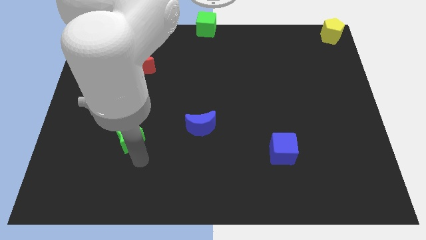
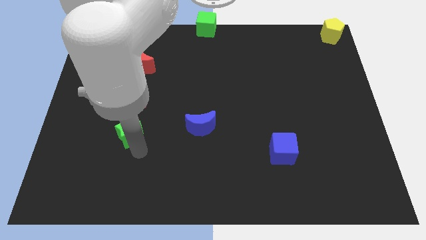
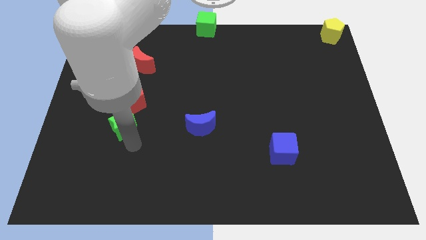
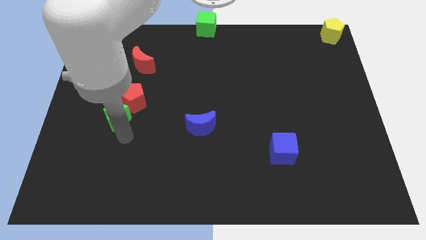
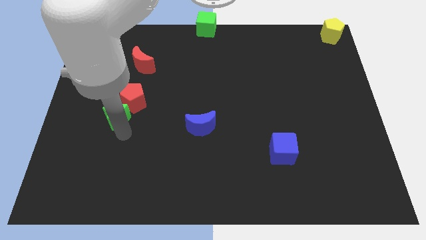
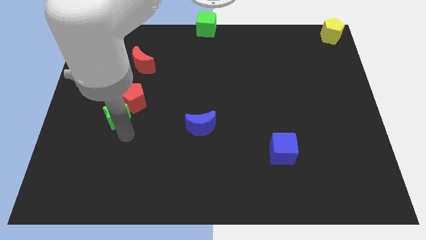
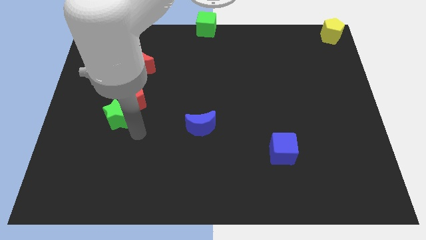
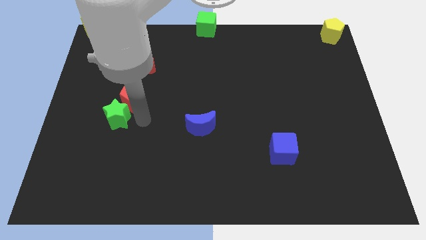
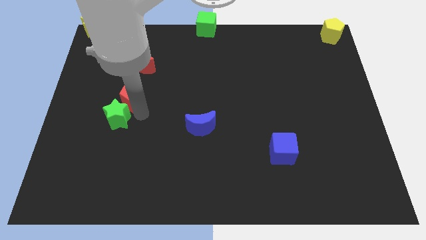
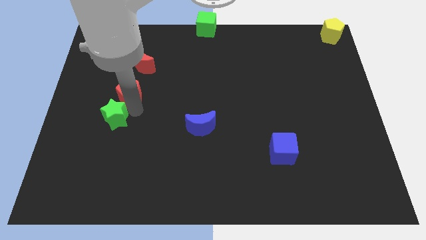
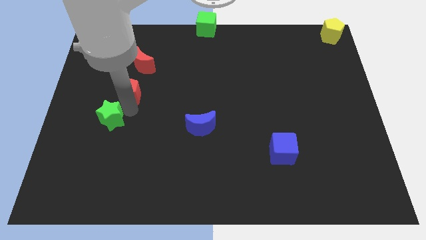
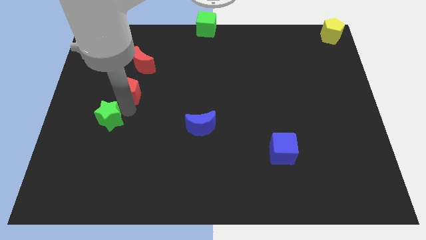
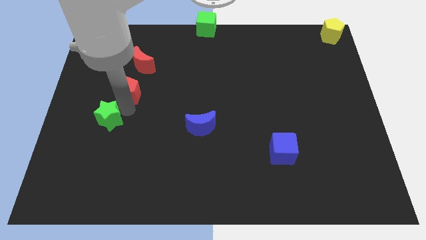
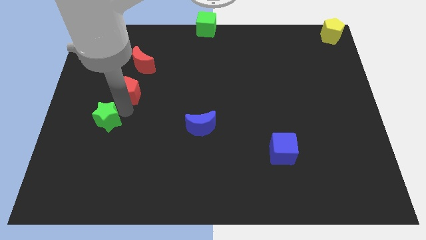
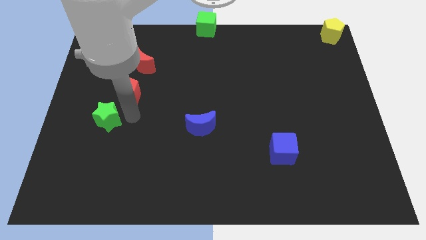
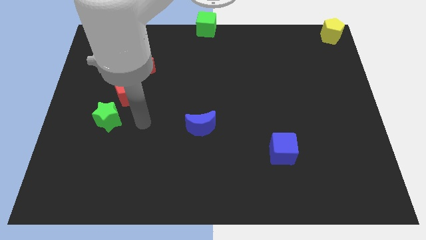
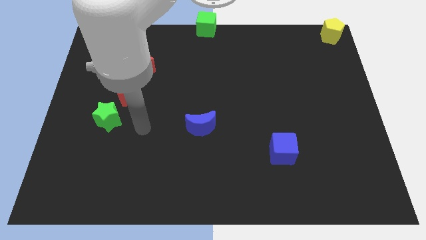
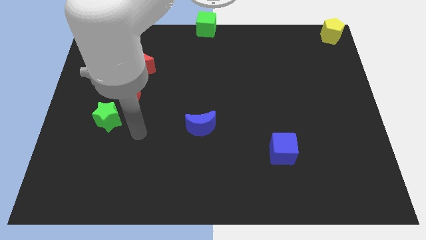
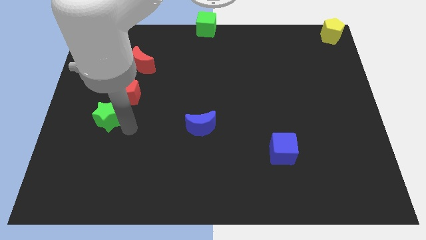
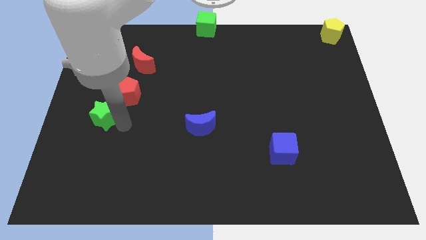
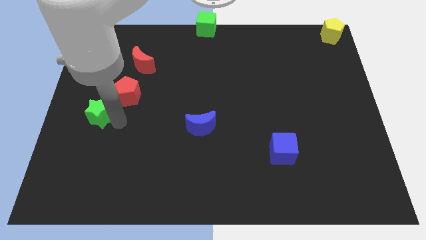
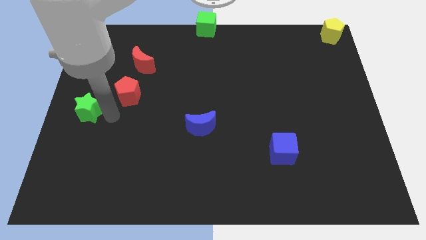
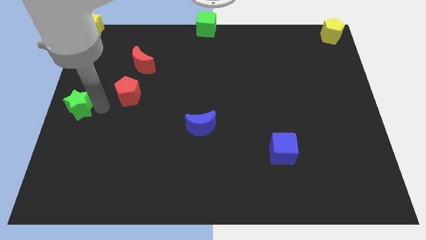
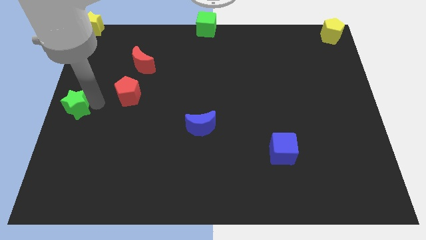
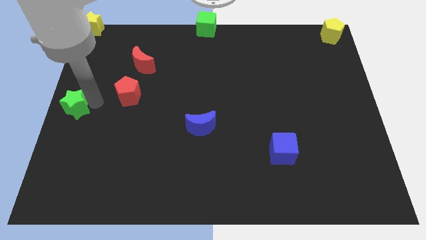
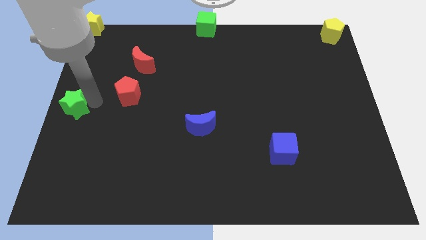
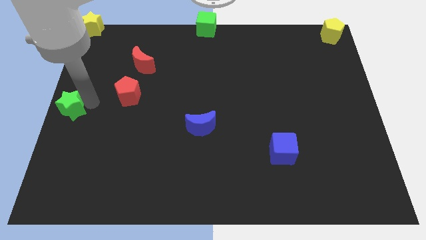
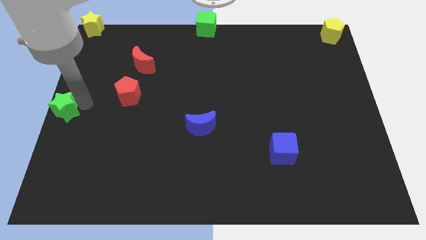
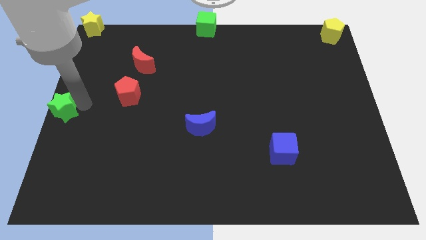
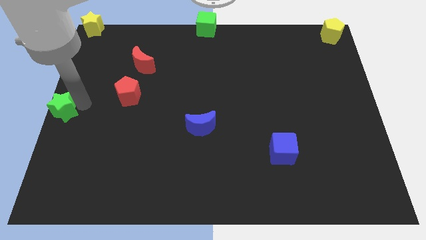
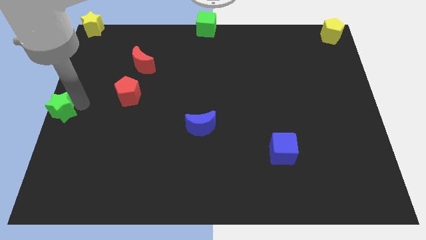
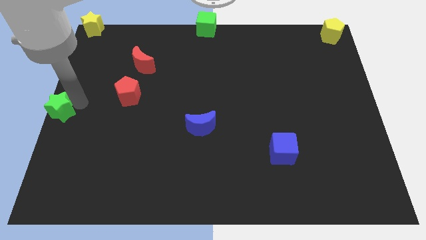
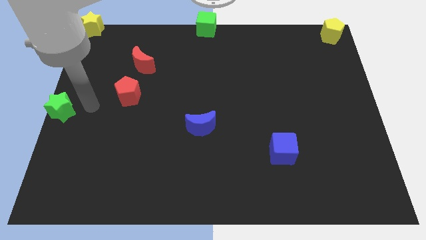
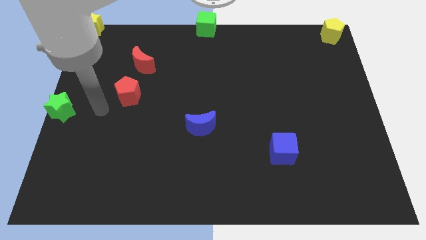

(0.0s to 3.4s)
move the green star to the center left side of the board

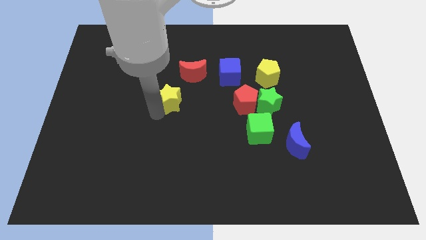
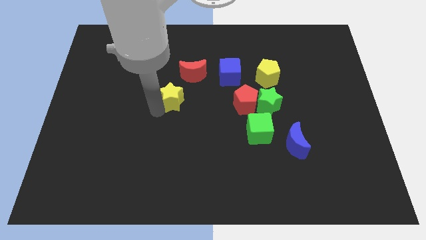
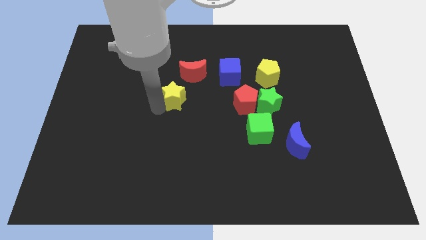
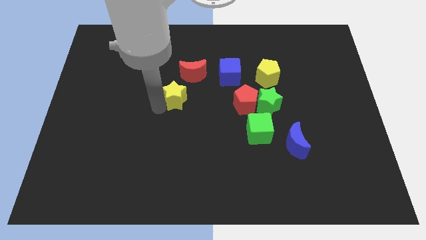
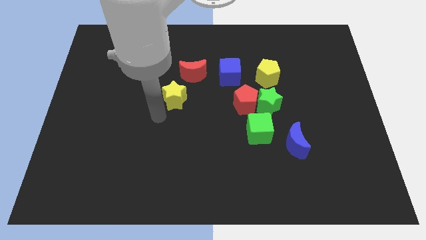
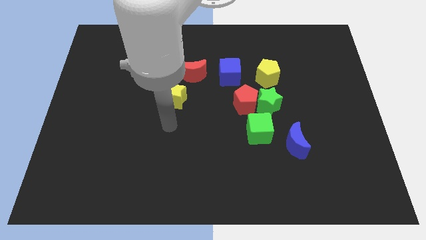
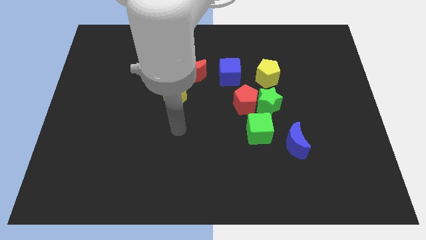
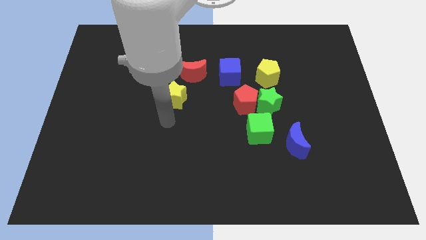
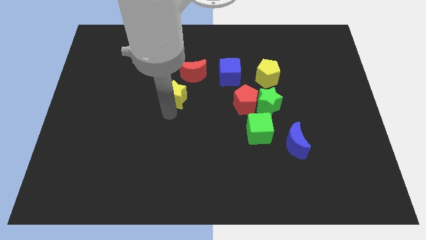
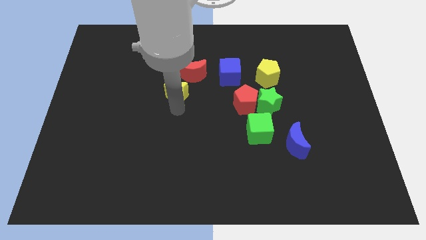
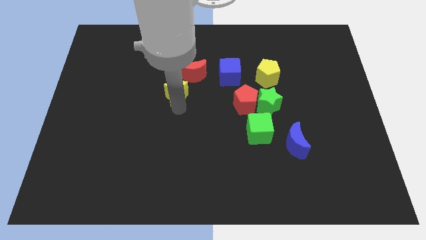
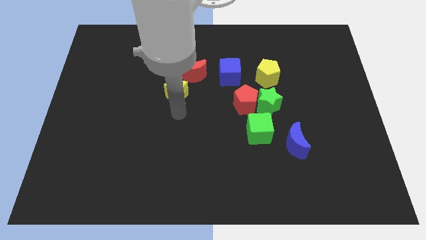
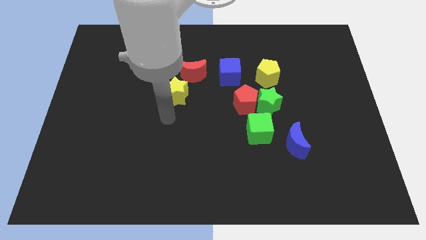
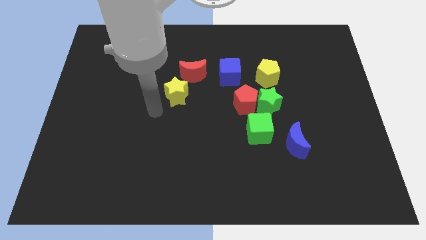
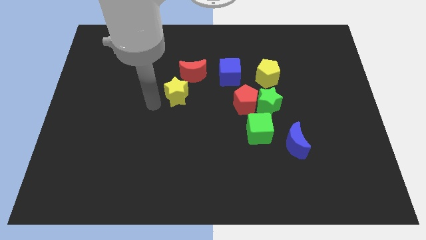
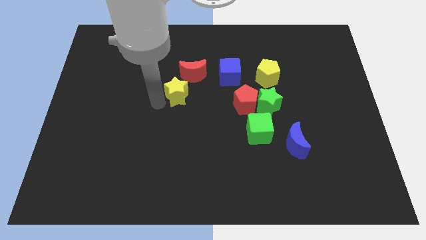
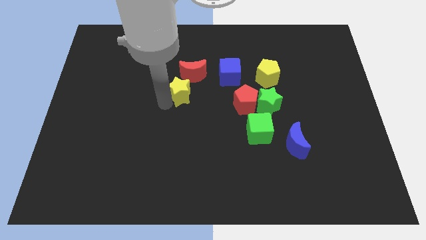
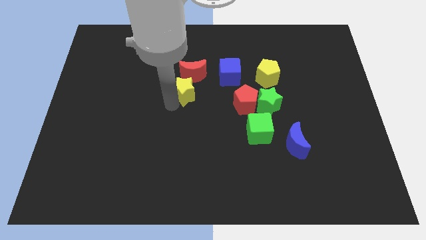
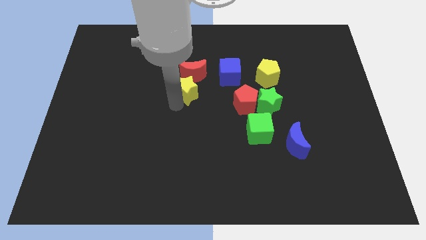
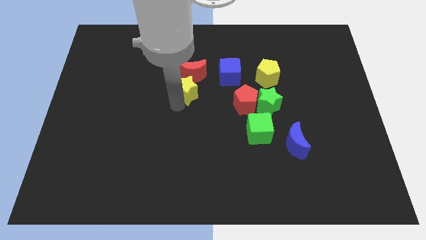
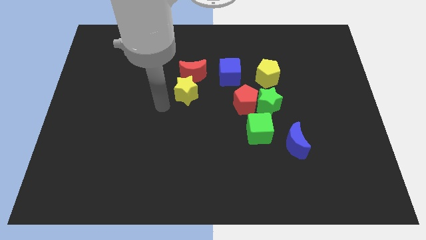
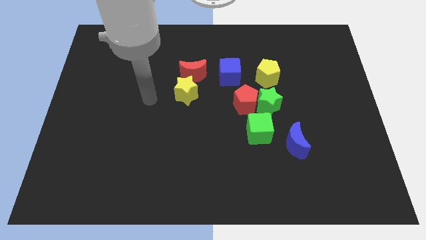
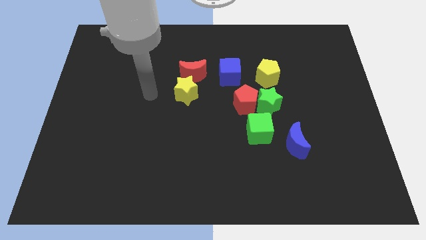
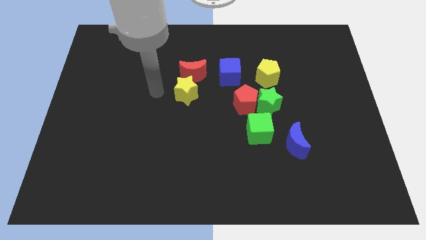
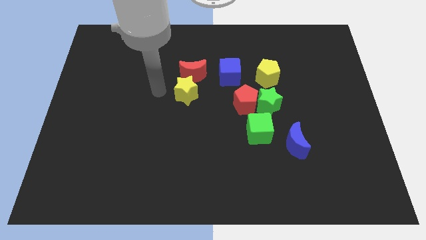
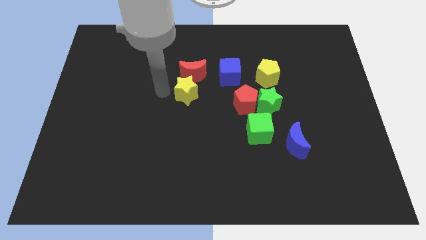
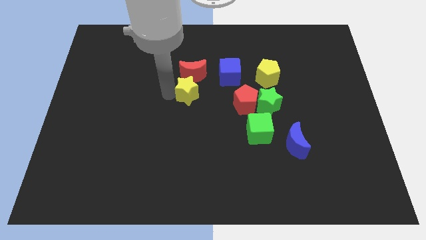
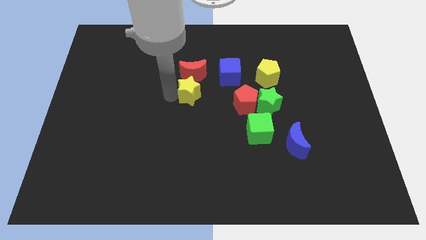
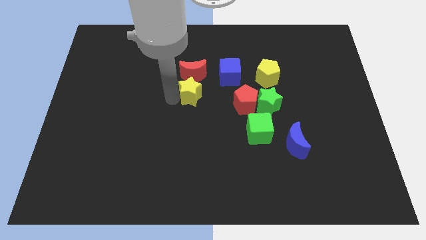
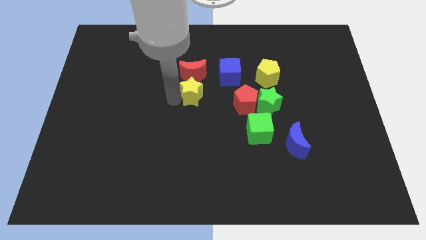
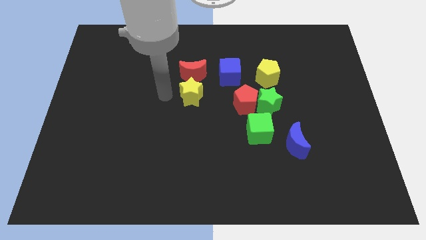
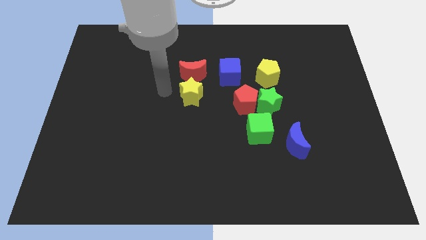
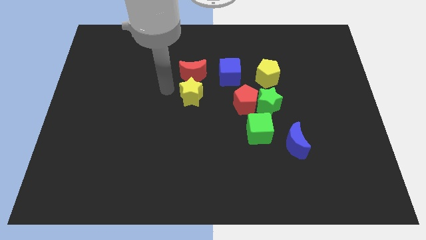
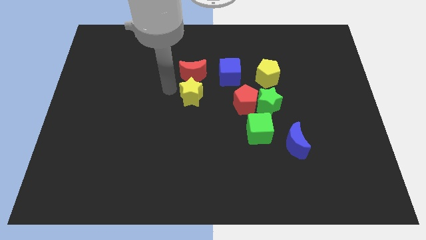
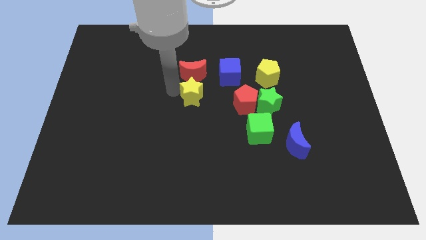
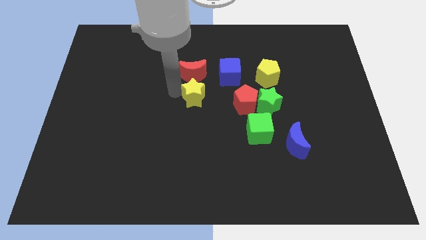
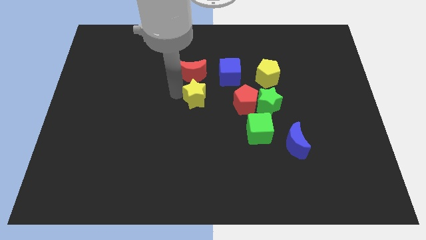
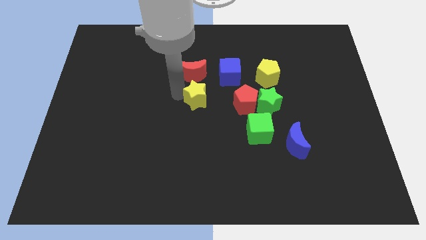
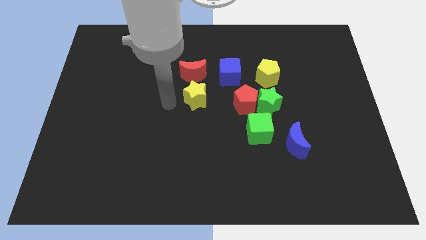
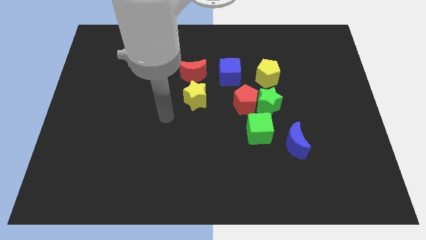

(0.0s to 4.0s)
place the yellow star vertically below the bottom side of the red crescent

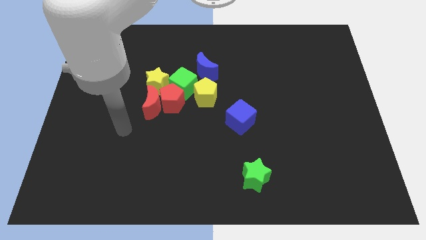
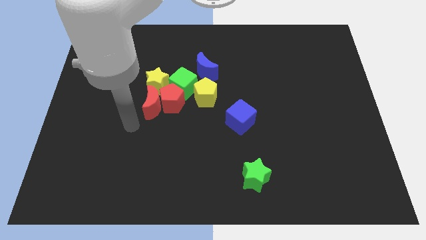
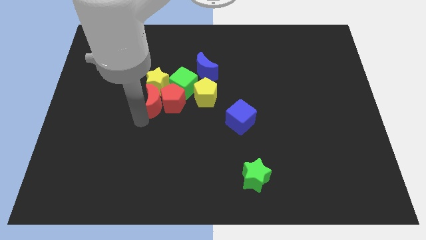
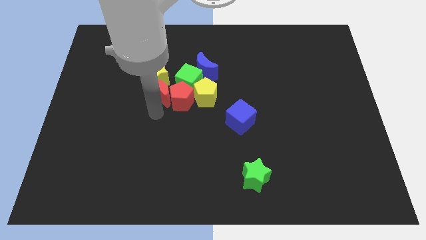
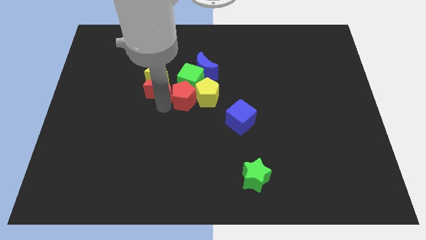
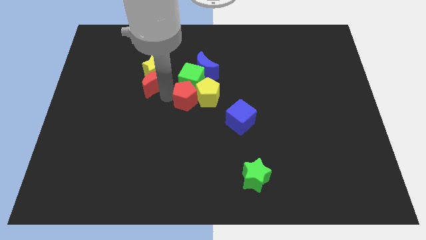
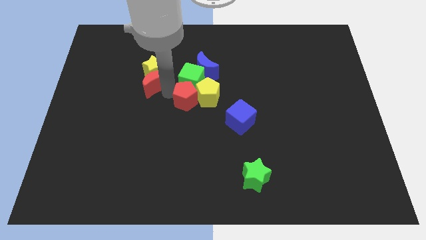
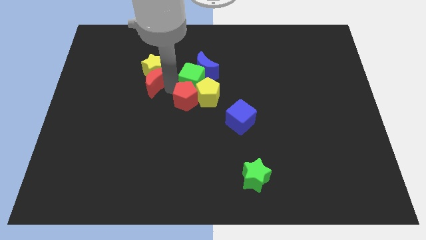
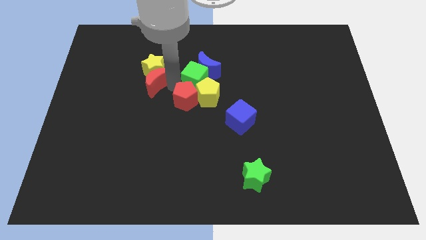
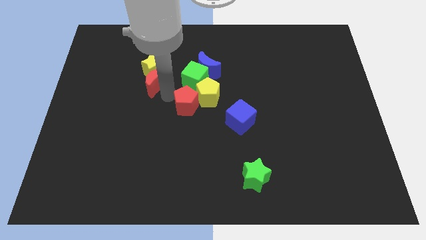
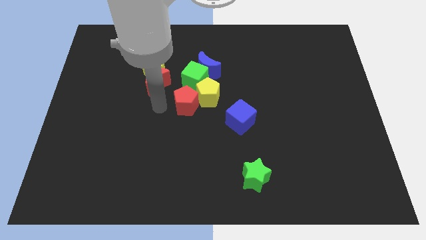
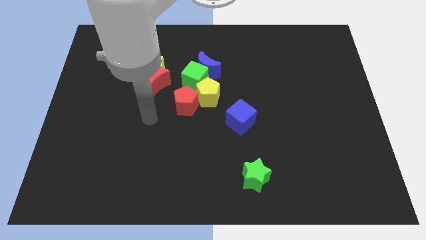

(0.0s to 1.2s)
separate the red crescent from the red pentagon

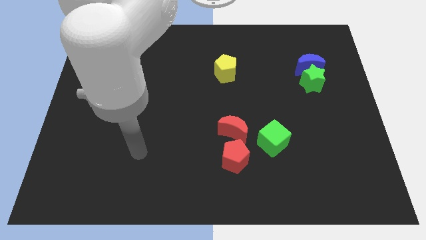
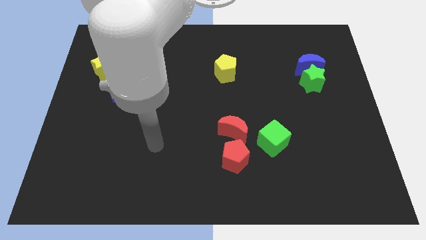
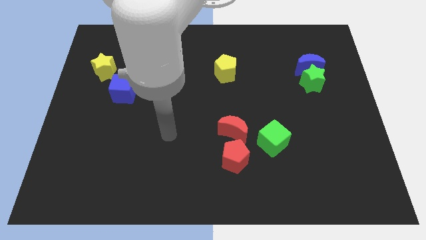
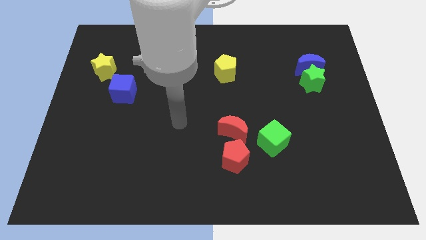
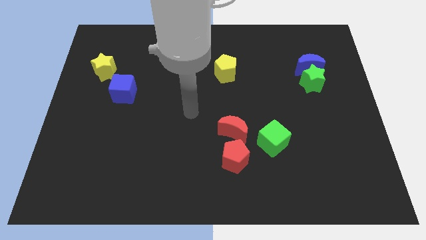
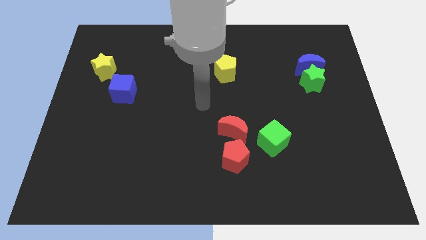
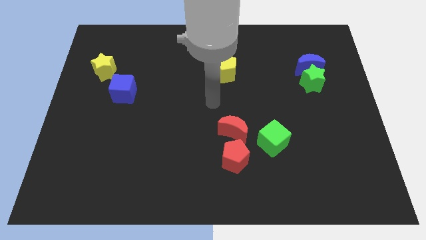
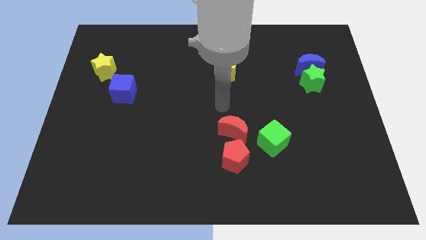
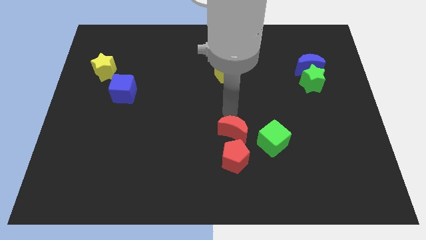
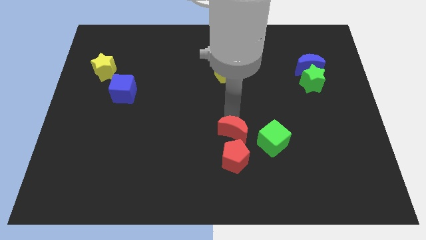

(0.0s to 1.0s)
move your arm to the top of the red moon
